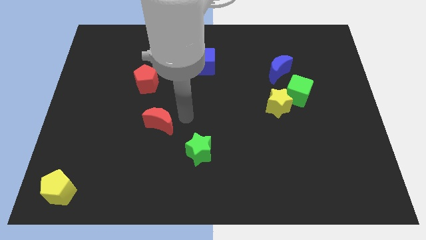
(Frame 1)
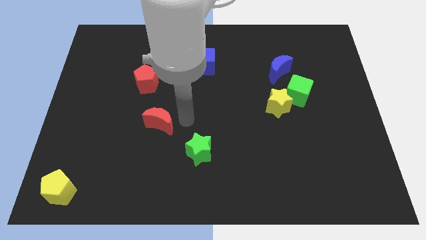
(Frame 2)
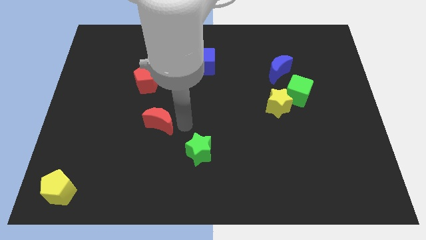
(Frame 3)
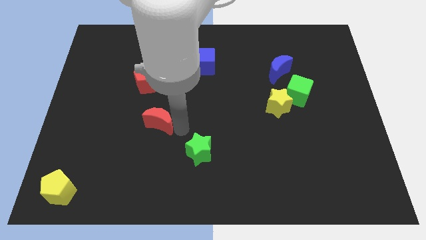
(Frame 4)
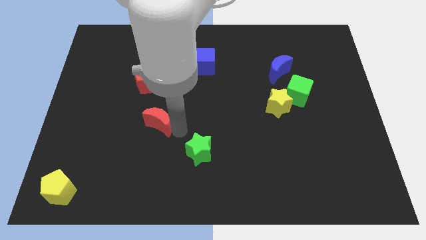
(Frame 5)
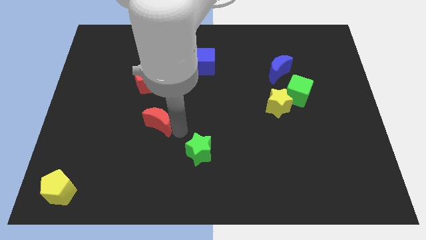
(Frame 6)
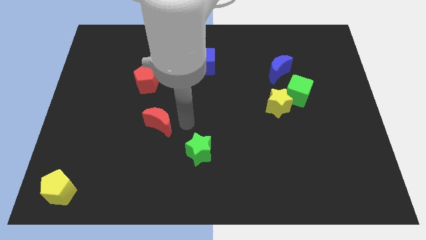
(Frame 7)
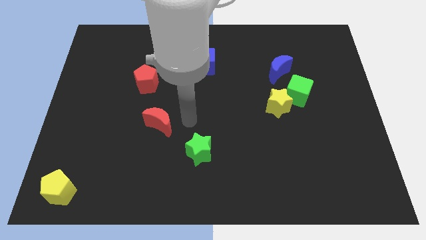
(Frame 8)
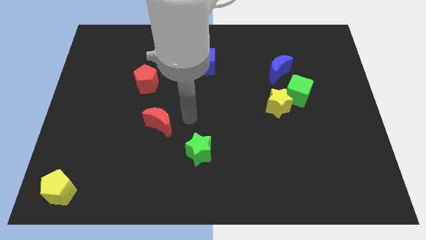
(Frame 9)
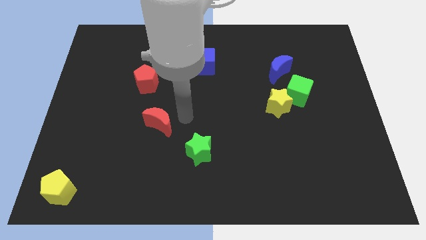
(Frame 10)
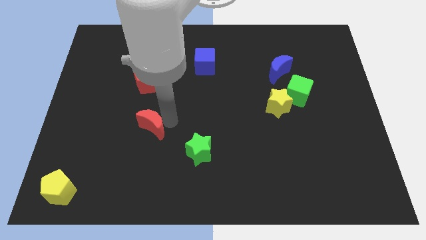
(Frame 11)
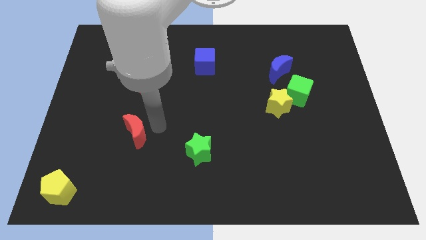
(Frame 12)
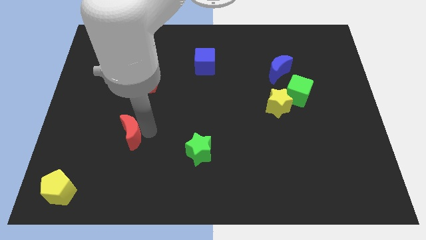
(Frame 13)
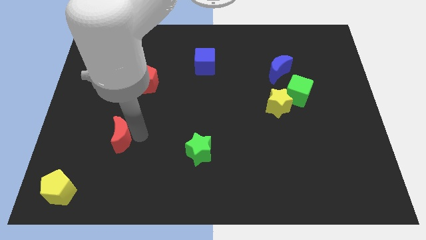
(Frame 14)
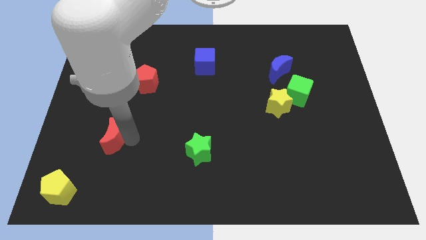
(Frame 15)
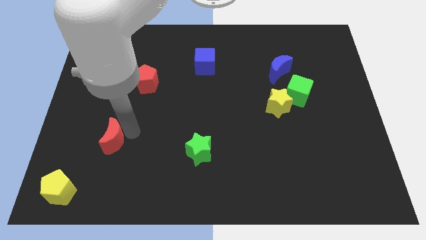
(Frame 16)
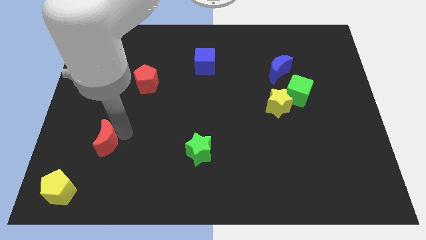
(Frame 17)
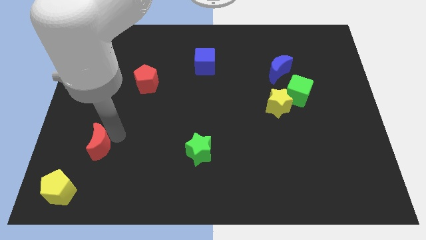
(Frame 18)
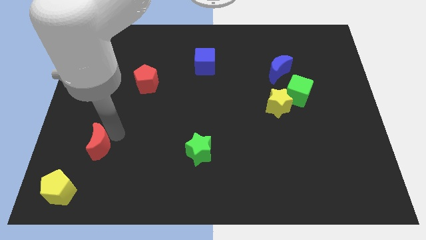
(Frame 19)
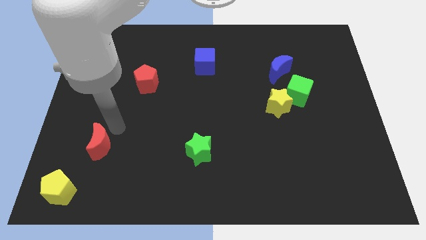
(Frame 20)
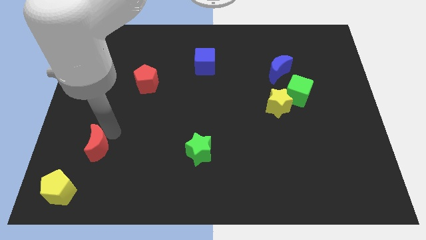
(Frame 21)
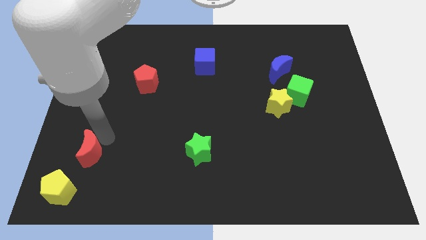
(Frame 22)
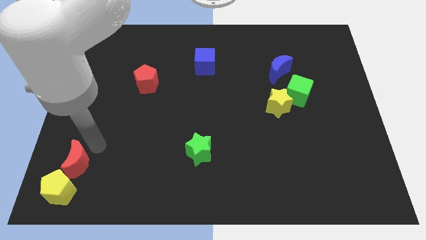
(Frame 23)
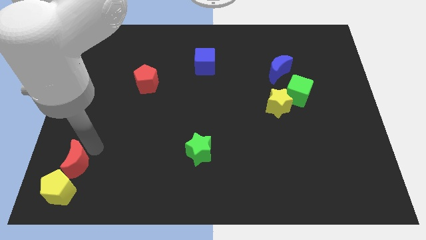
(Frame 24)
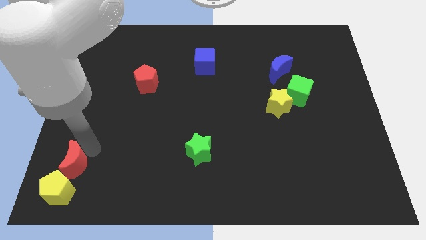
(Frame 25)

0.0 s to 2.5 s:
place the red moon above the yellow pentagon

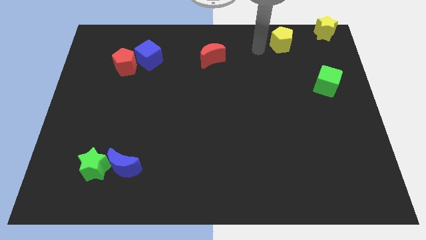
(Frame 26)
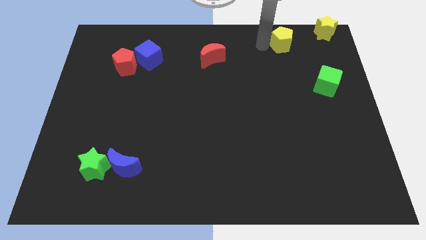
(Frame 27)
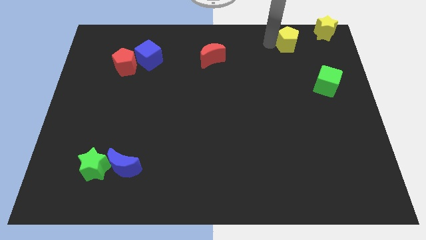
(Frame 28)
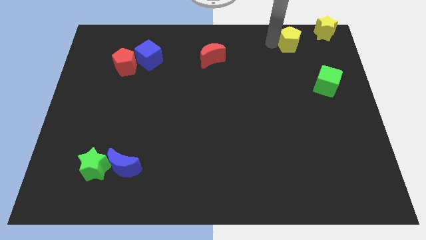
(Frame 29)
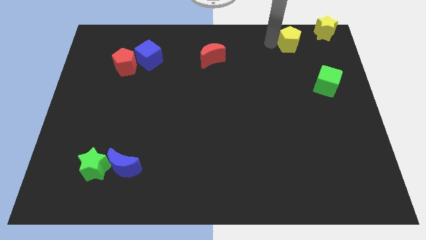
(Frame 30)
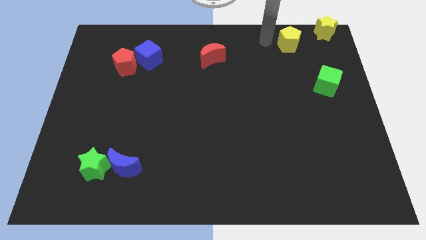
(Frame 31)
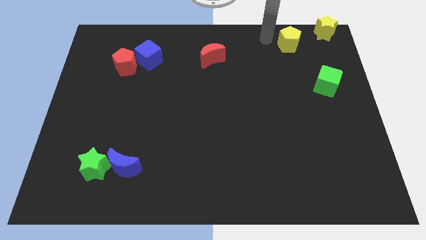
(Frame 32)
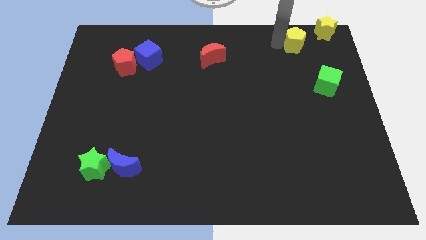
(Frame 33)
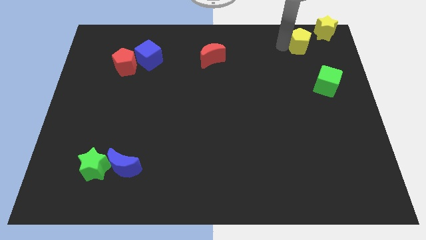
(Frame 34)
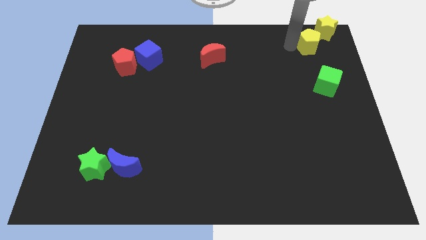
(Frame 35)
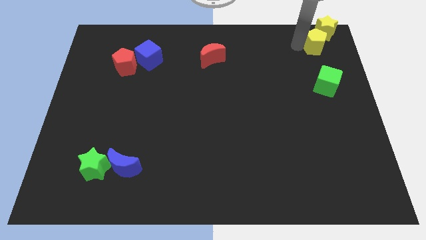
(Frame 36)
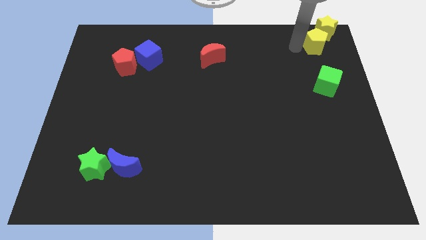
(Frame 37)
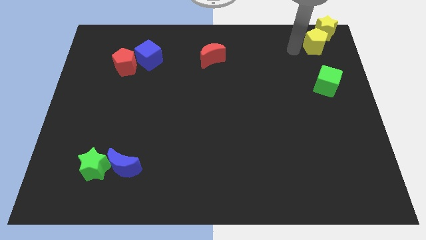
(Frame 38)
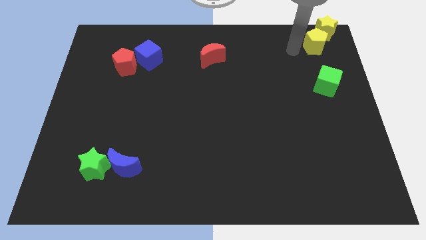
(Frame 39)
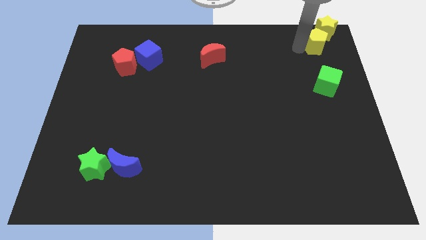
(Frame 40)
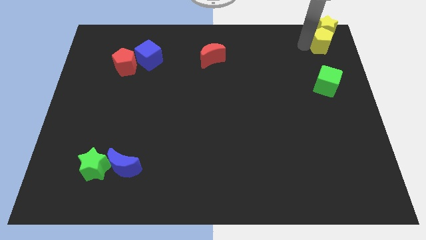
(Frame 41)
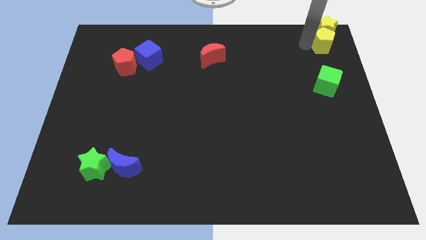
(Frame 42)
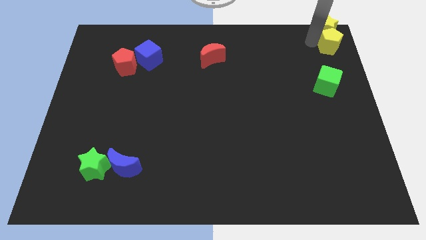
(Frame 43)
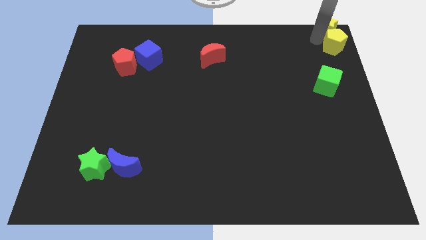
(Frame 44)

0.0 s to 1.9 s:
arrange the yellow pentago at the bottom of the yellow star

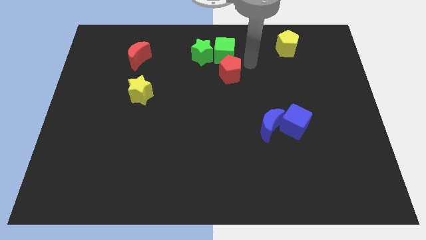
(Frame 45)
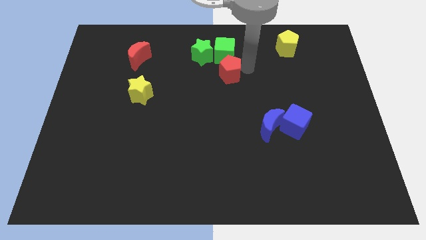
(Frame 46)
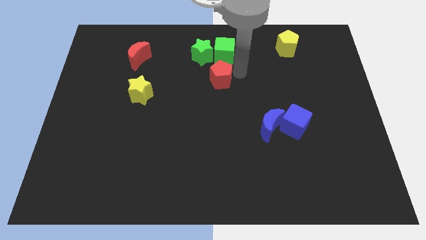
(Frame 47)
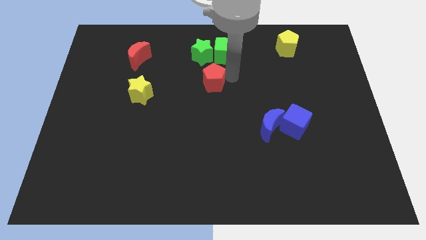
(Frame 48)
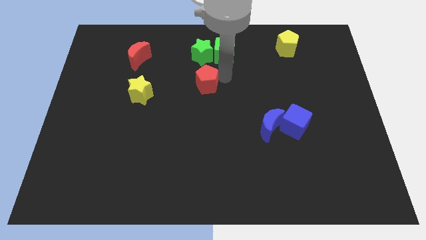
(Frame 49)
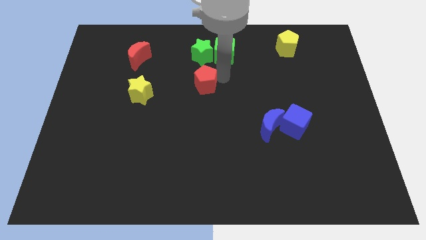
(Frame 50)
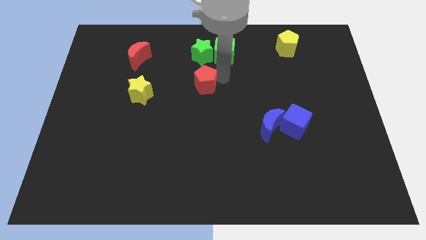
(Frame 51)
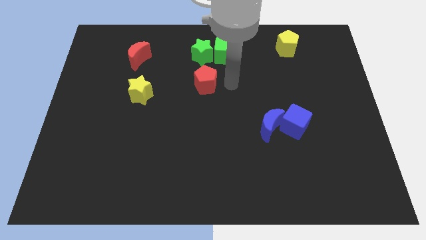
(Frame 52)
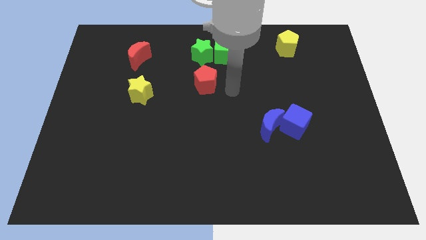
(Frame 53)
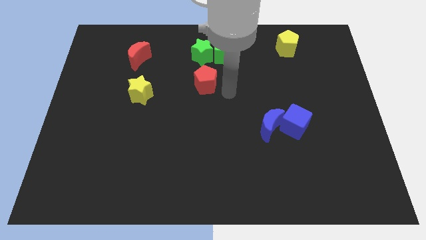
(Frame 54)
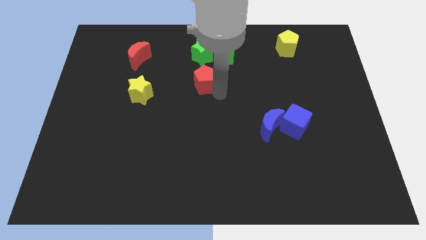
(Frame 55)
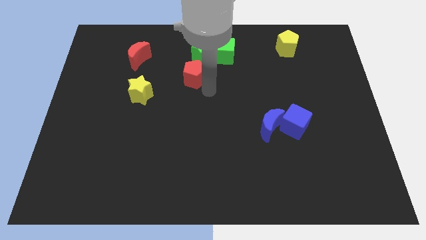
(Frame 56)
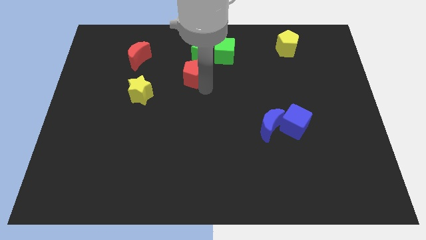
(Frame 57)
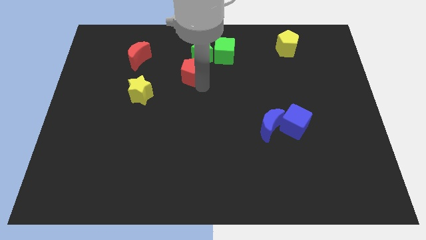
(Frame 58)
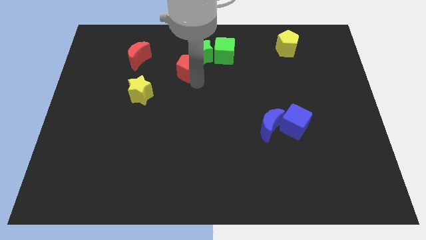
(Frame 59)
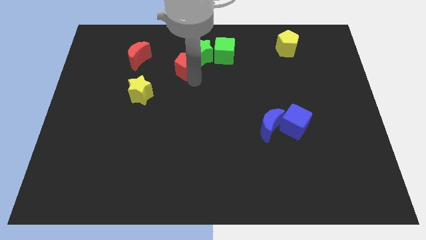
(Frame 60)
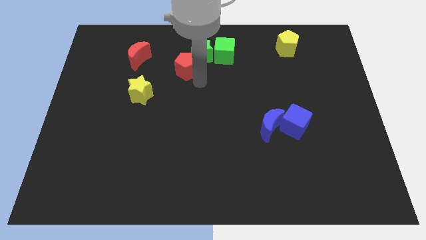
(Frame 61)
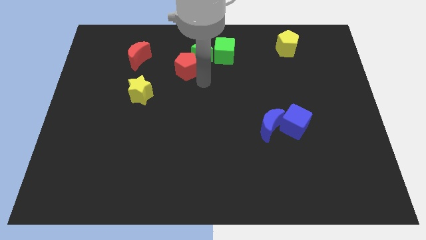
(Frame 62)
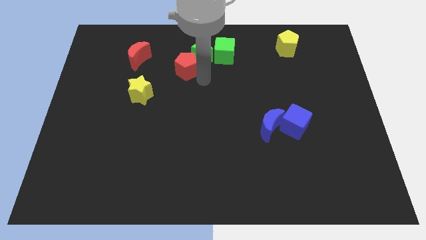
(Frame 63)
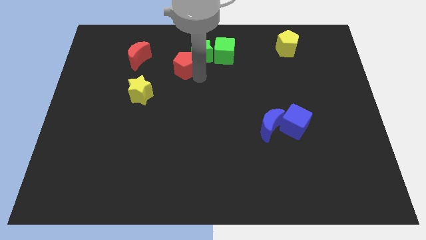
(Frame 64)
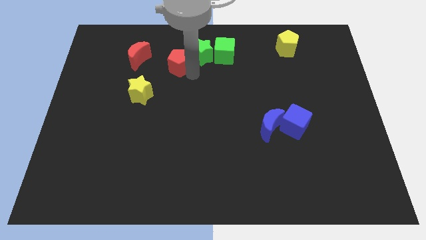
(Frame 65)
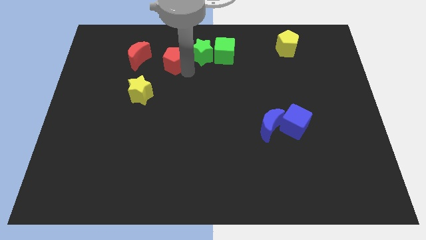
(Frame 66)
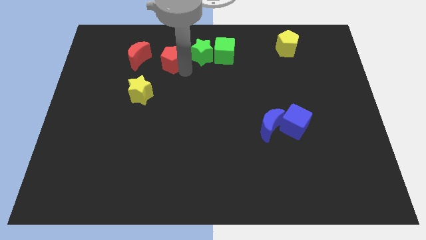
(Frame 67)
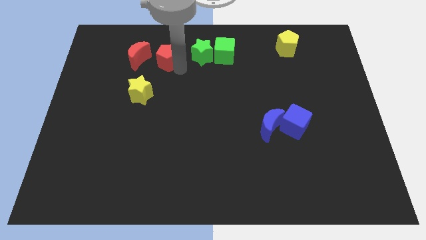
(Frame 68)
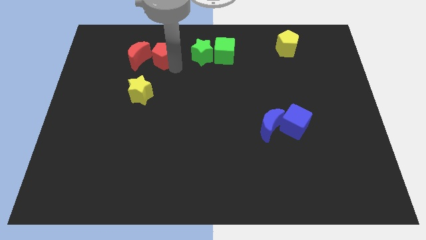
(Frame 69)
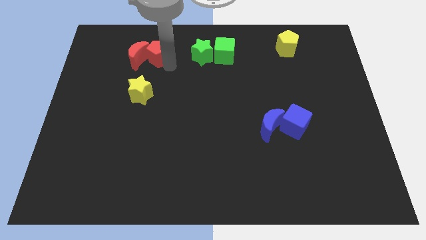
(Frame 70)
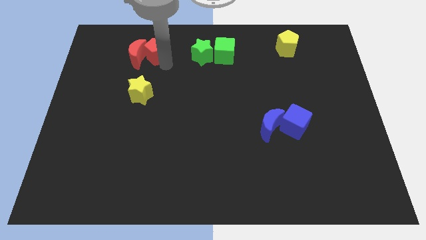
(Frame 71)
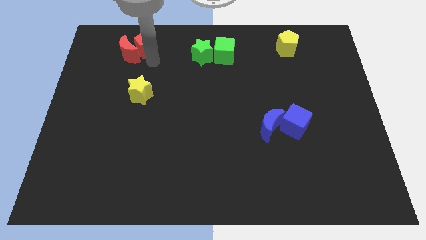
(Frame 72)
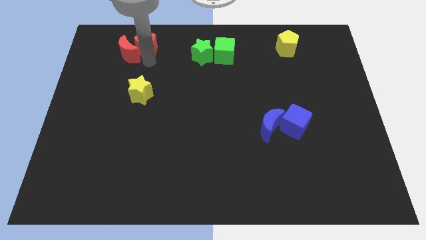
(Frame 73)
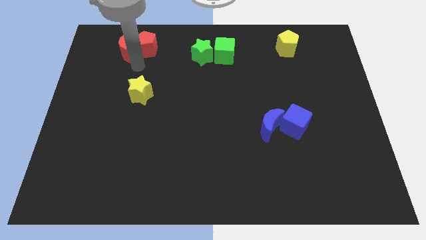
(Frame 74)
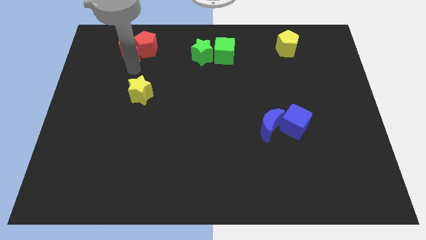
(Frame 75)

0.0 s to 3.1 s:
push red pentagon into red moon

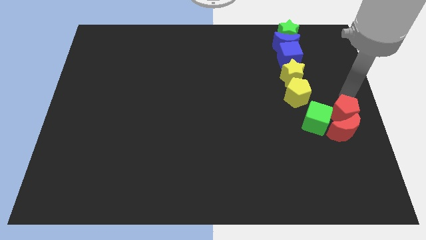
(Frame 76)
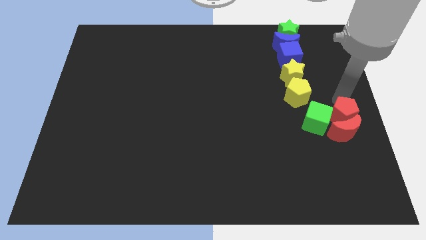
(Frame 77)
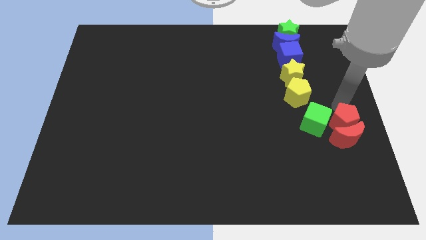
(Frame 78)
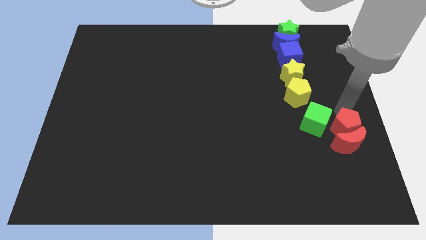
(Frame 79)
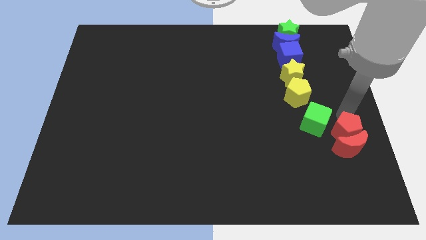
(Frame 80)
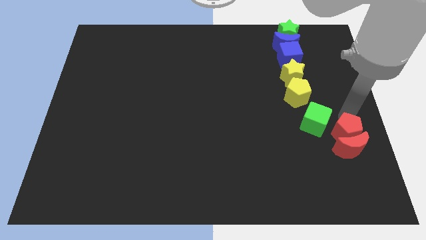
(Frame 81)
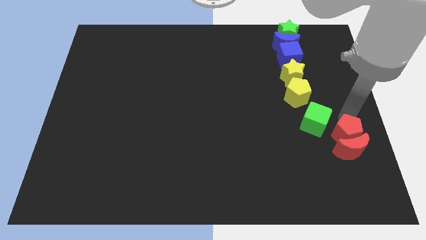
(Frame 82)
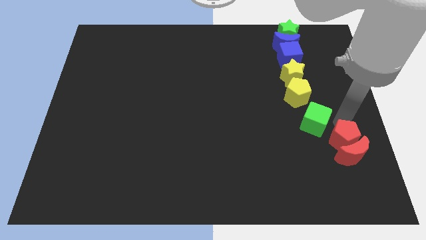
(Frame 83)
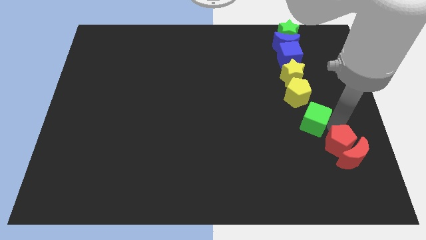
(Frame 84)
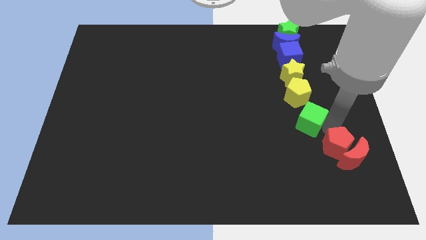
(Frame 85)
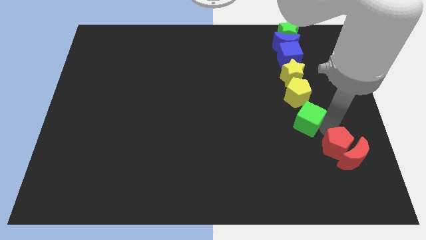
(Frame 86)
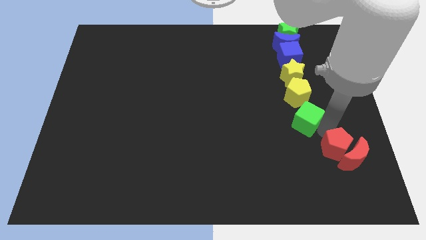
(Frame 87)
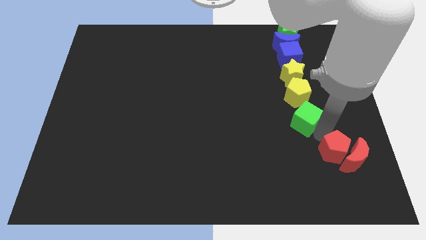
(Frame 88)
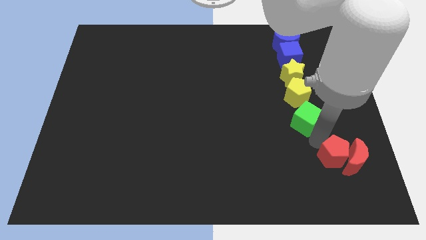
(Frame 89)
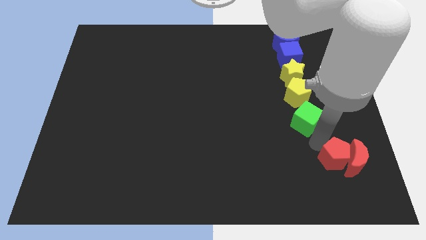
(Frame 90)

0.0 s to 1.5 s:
separate the red pentagon along with the red moon from the green cube

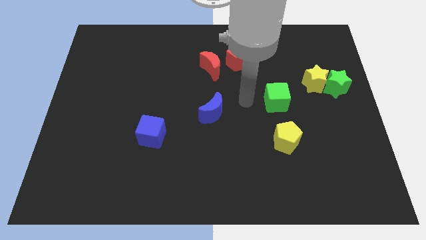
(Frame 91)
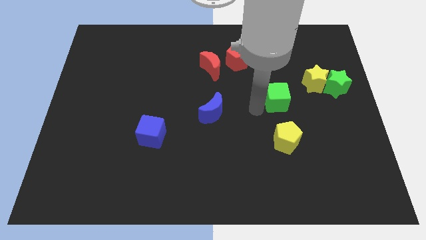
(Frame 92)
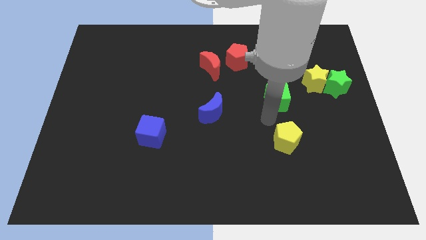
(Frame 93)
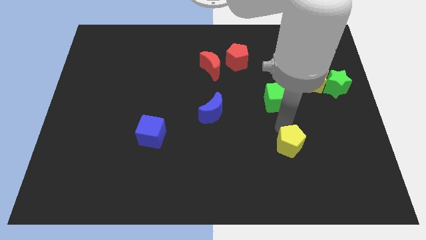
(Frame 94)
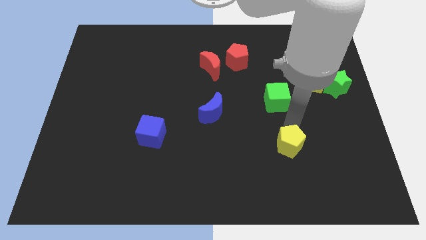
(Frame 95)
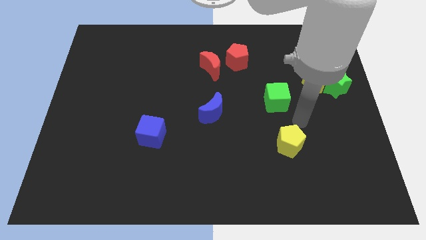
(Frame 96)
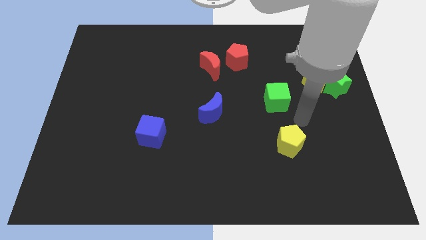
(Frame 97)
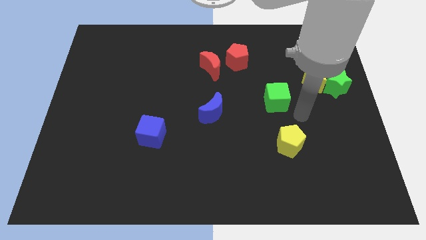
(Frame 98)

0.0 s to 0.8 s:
slightly move the yellow pentagon towards down
